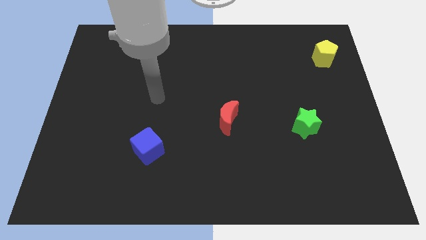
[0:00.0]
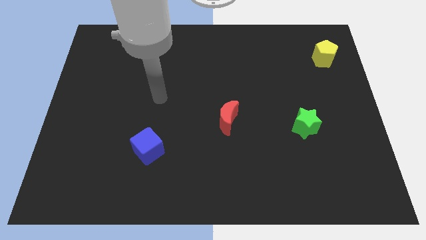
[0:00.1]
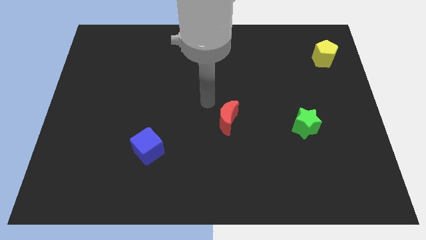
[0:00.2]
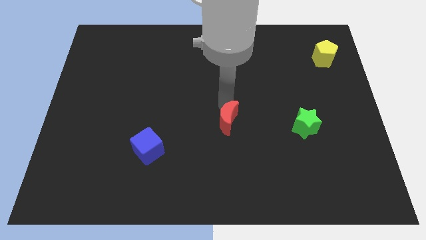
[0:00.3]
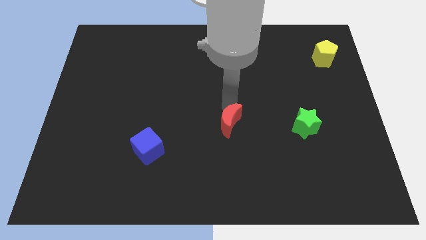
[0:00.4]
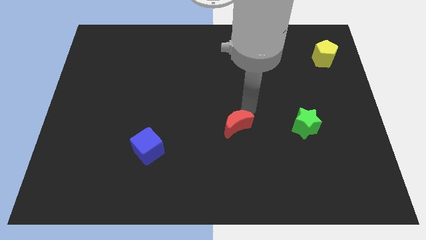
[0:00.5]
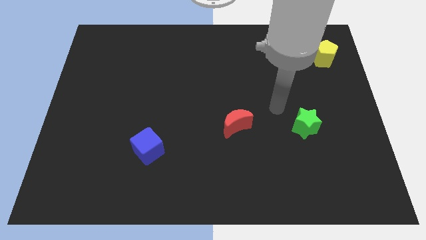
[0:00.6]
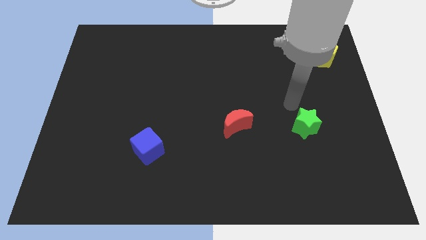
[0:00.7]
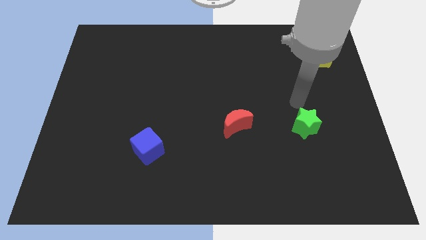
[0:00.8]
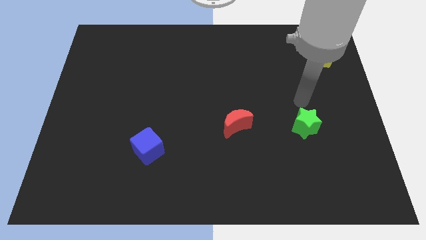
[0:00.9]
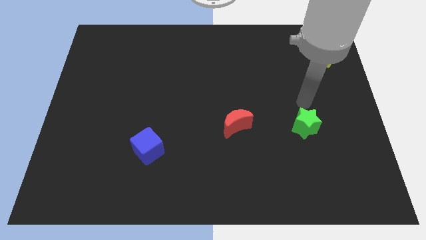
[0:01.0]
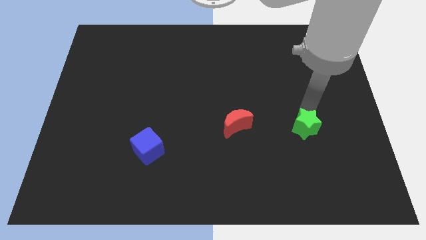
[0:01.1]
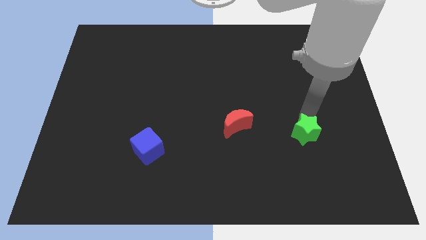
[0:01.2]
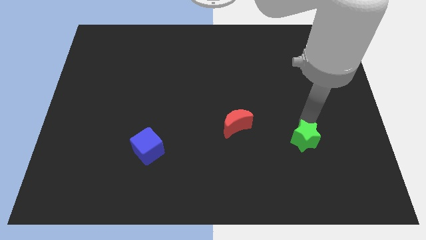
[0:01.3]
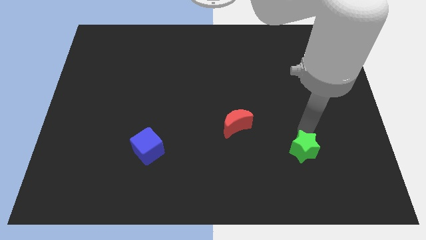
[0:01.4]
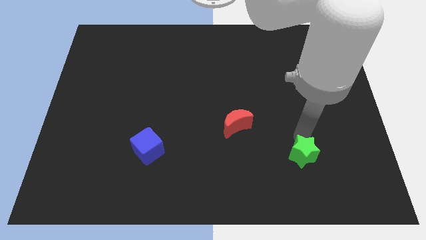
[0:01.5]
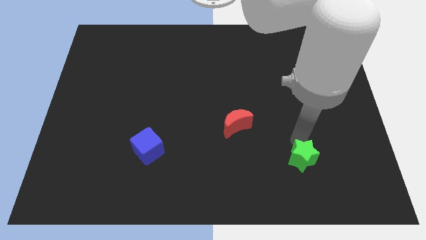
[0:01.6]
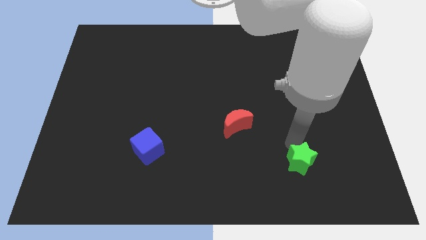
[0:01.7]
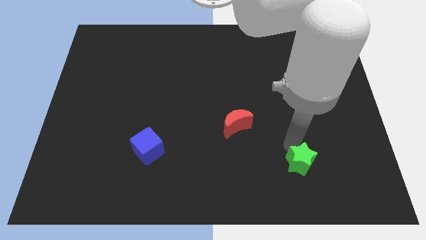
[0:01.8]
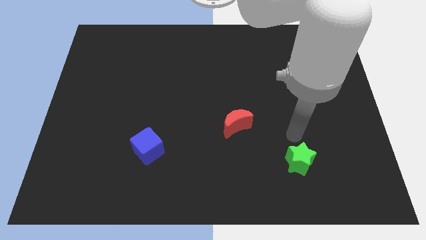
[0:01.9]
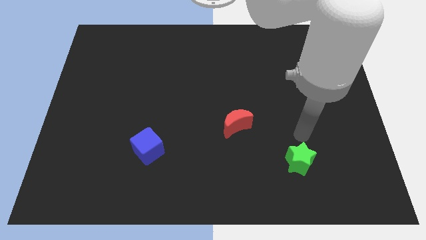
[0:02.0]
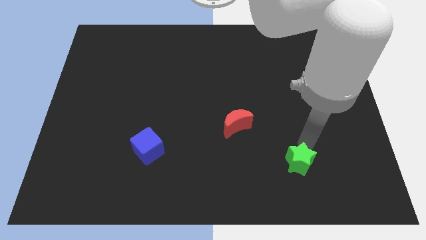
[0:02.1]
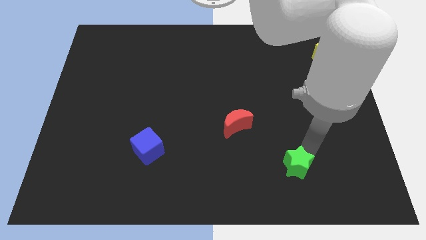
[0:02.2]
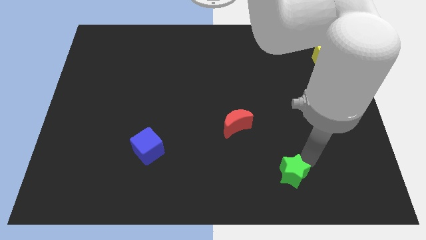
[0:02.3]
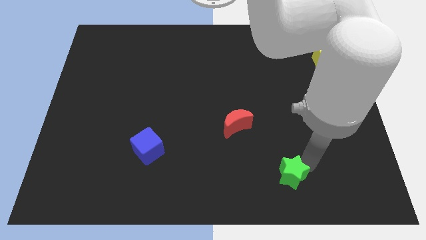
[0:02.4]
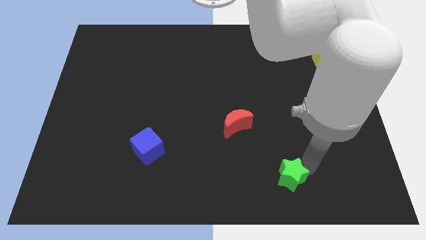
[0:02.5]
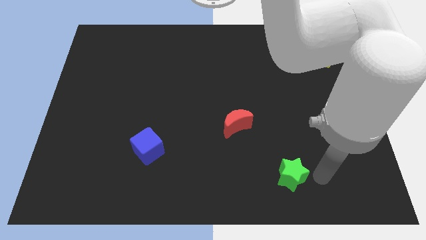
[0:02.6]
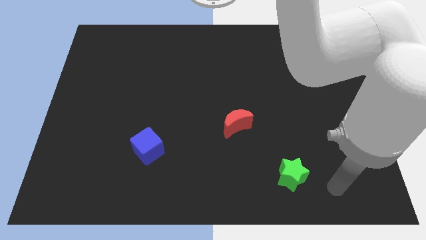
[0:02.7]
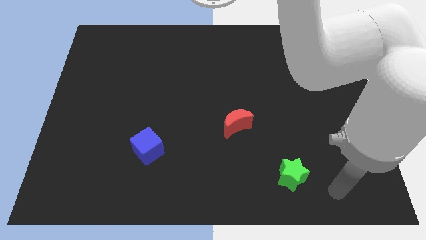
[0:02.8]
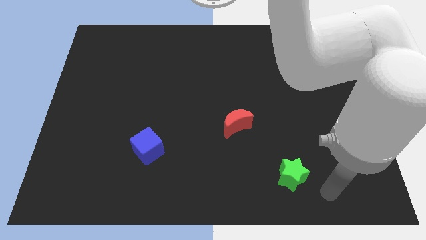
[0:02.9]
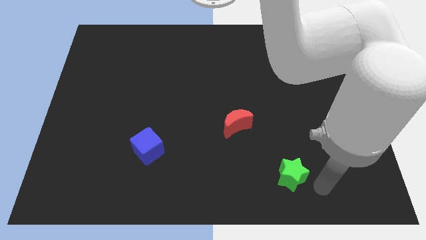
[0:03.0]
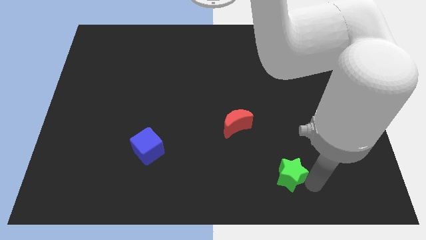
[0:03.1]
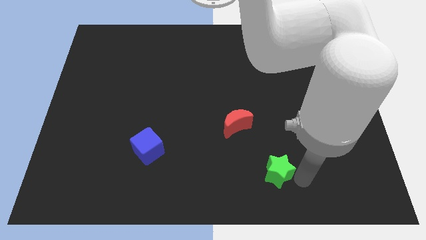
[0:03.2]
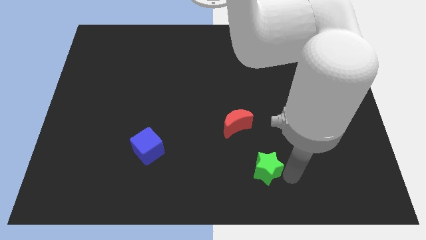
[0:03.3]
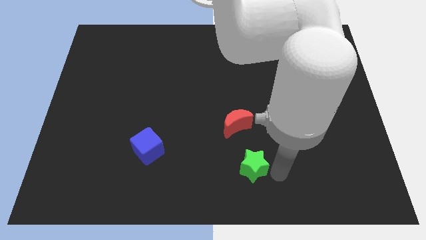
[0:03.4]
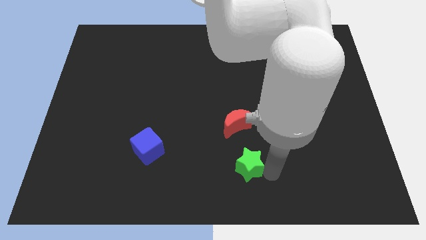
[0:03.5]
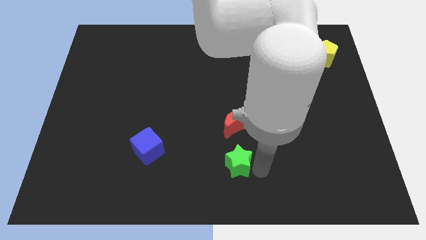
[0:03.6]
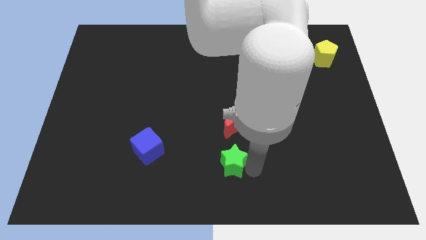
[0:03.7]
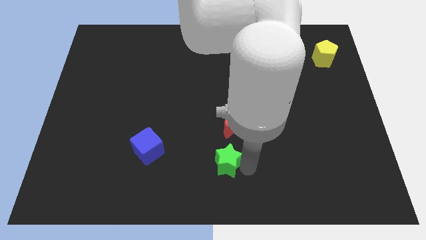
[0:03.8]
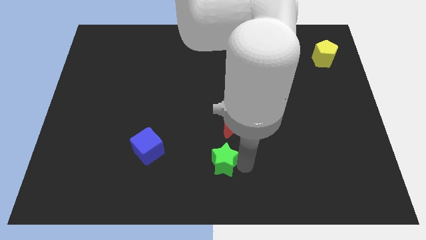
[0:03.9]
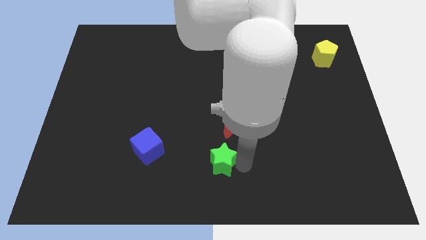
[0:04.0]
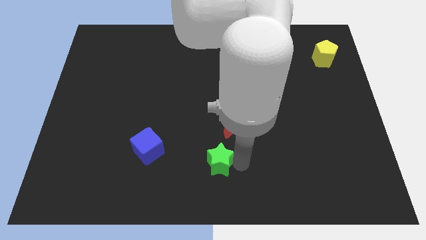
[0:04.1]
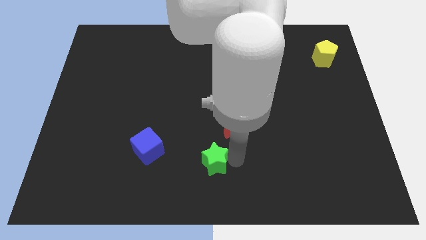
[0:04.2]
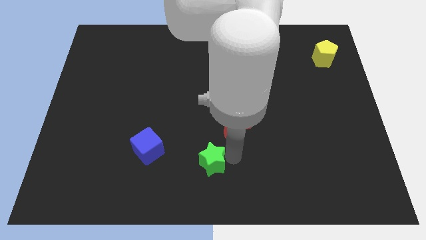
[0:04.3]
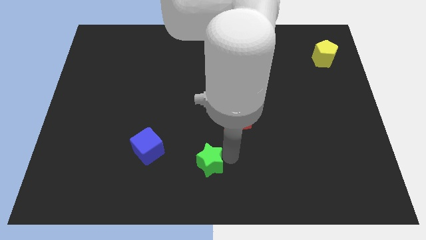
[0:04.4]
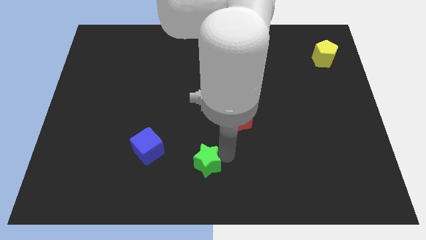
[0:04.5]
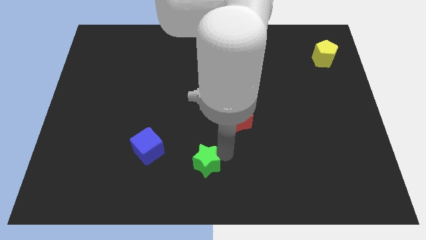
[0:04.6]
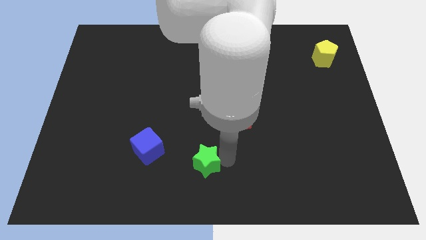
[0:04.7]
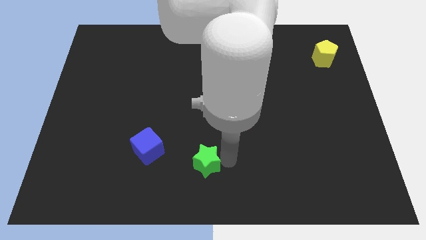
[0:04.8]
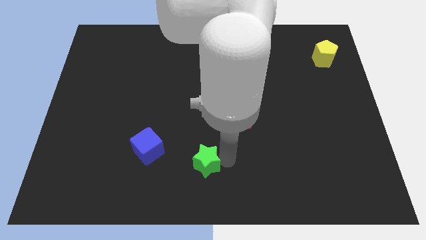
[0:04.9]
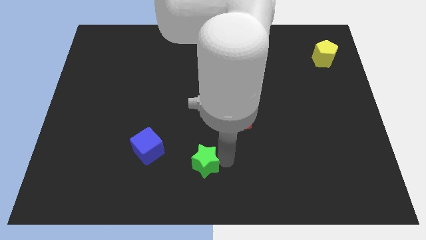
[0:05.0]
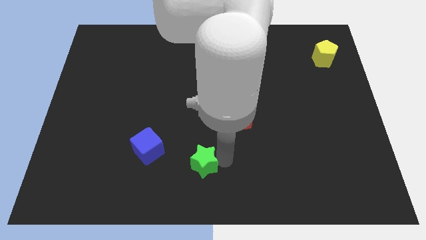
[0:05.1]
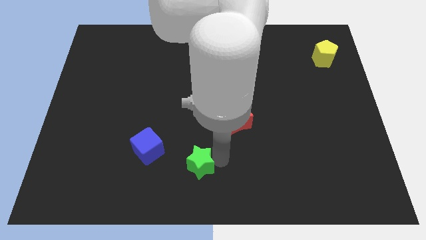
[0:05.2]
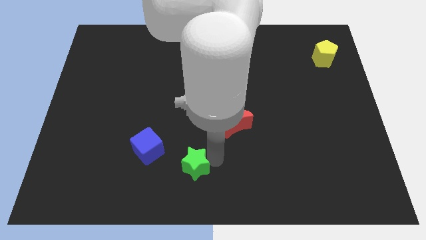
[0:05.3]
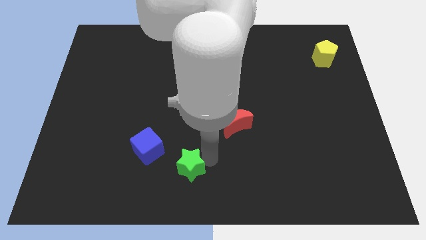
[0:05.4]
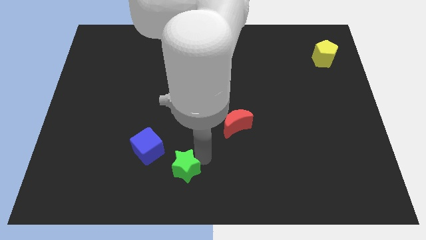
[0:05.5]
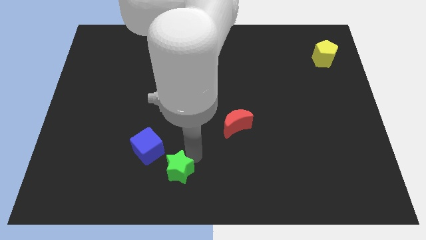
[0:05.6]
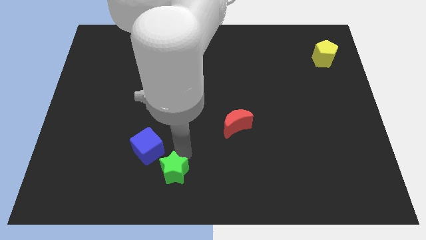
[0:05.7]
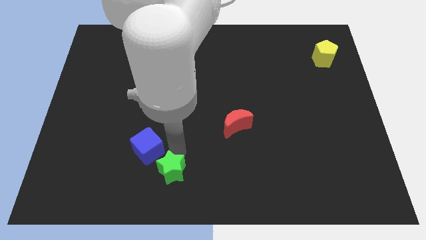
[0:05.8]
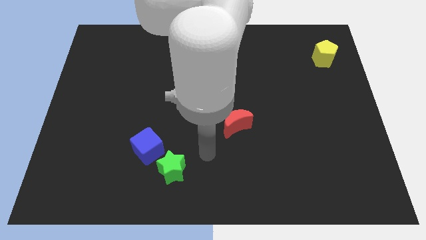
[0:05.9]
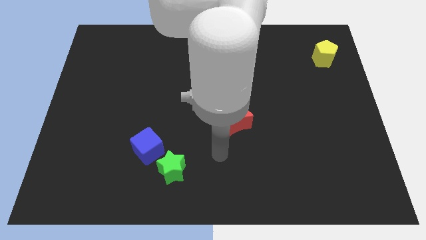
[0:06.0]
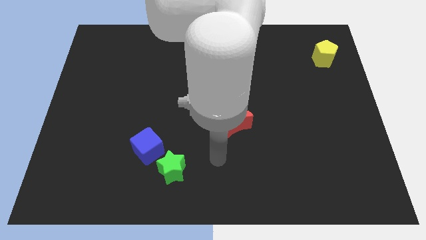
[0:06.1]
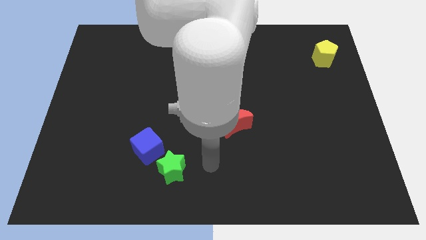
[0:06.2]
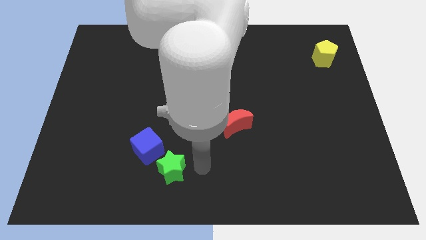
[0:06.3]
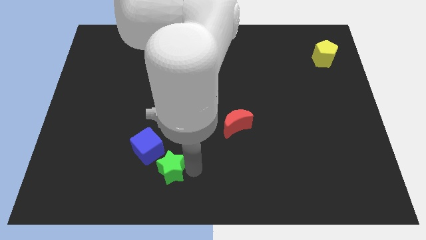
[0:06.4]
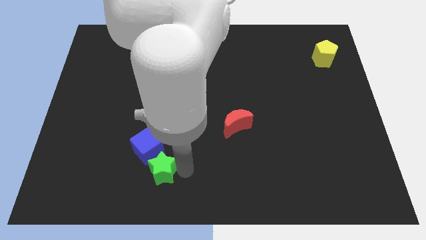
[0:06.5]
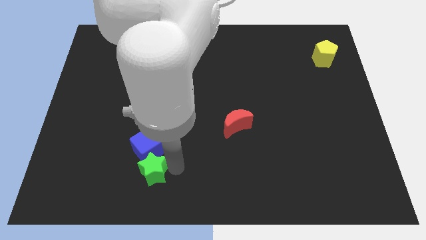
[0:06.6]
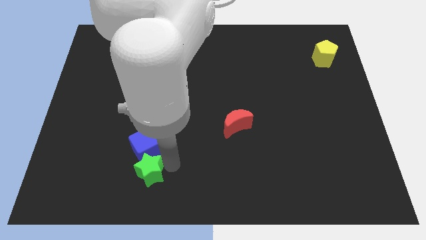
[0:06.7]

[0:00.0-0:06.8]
slide the star to the cube

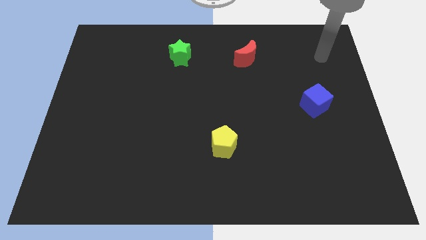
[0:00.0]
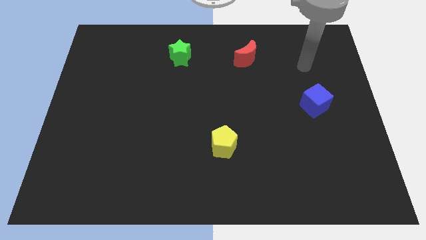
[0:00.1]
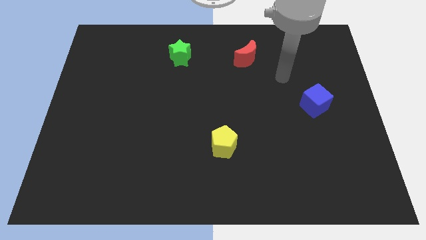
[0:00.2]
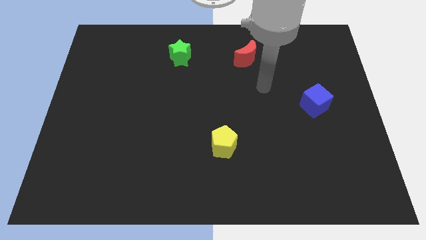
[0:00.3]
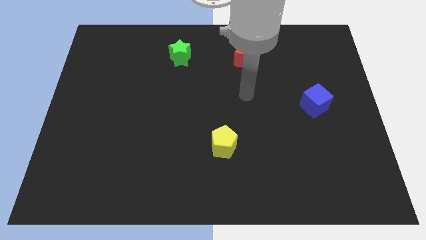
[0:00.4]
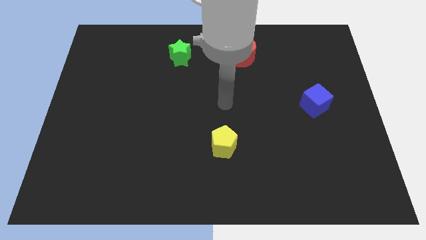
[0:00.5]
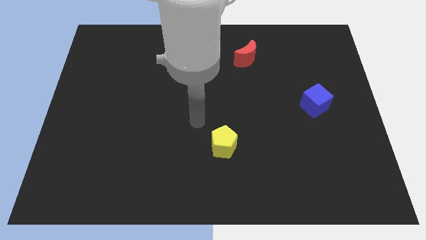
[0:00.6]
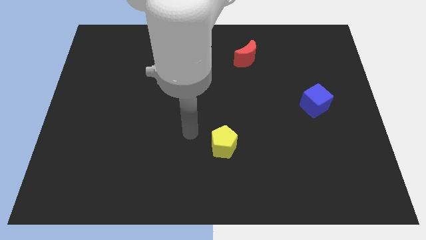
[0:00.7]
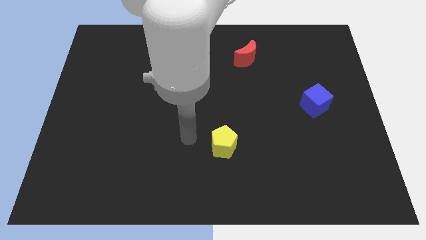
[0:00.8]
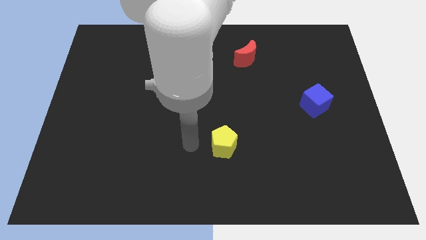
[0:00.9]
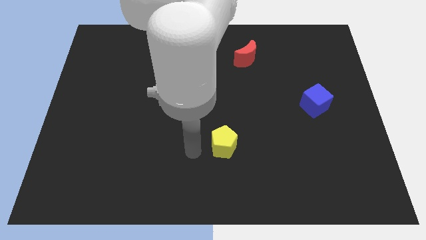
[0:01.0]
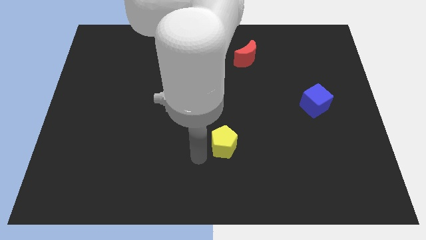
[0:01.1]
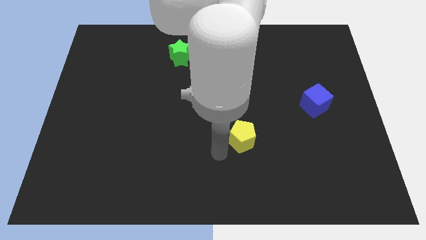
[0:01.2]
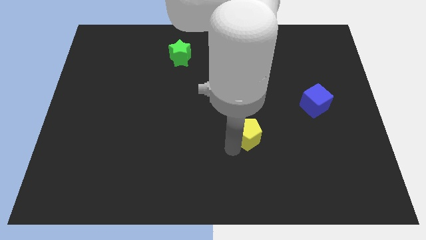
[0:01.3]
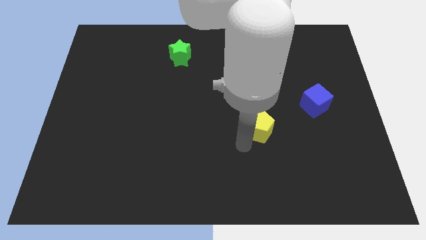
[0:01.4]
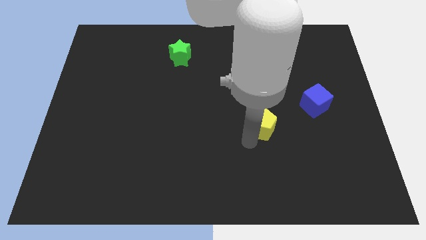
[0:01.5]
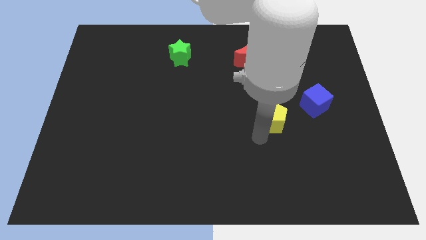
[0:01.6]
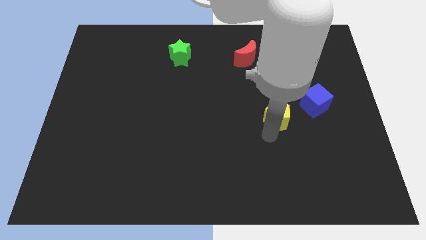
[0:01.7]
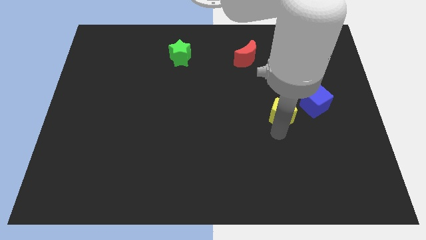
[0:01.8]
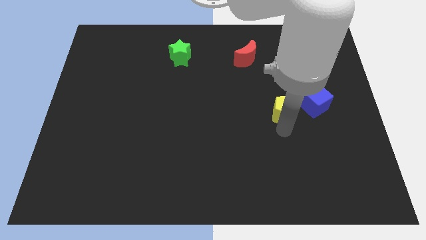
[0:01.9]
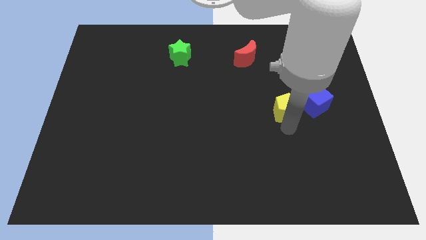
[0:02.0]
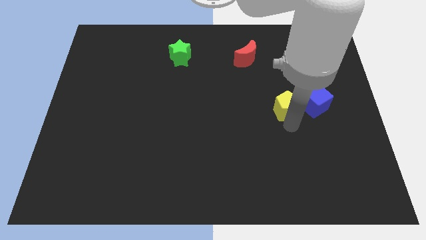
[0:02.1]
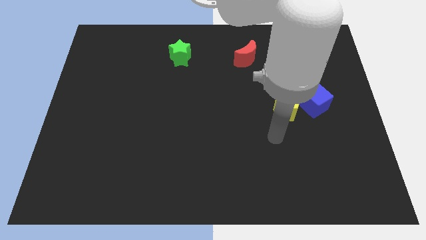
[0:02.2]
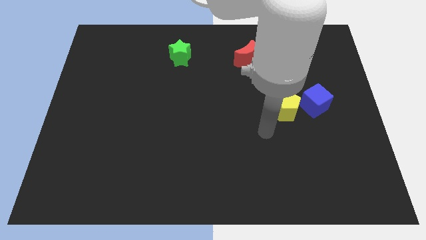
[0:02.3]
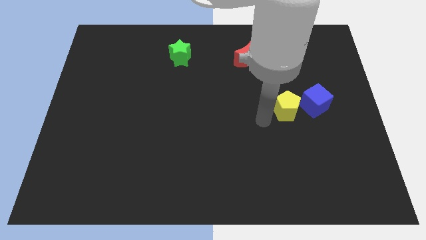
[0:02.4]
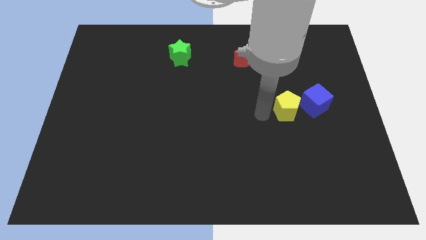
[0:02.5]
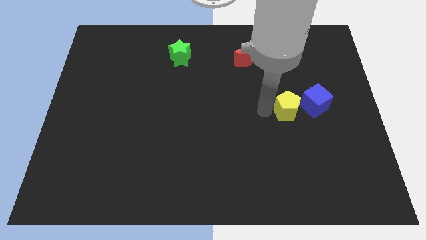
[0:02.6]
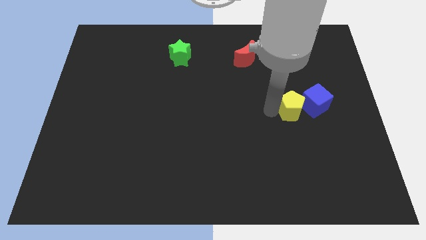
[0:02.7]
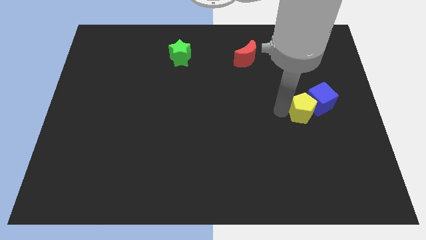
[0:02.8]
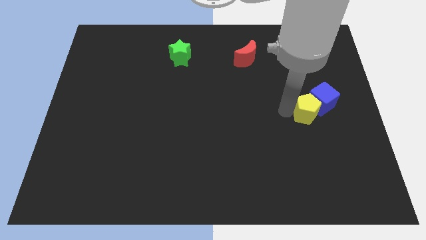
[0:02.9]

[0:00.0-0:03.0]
push the pentagon close to the blue block
